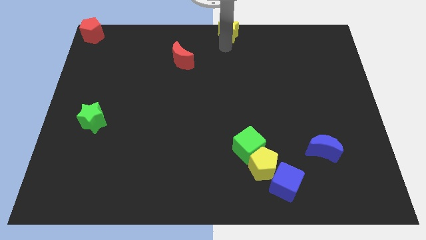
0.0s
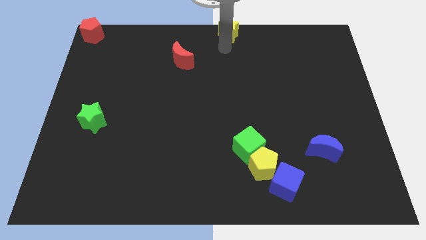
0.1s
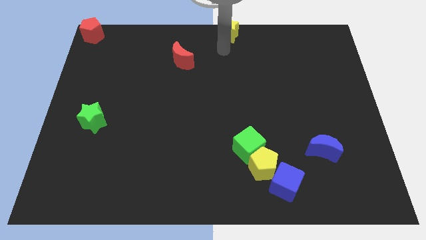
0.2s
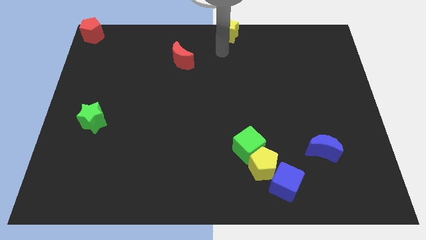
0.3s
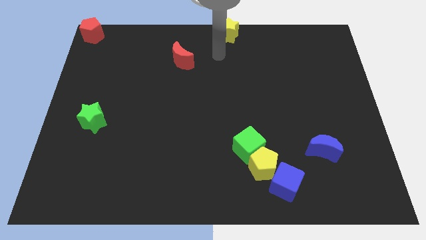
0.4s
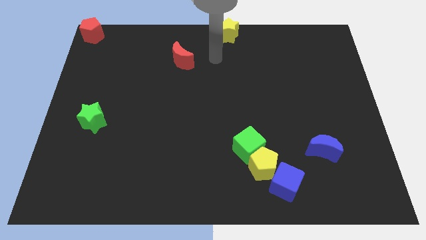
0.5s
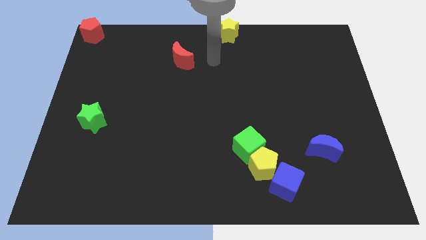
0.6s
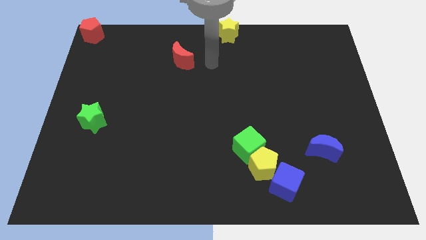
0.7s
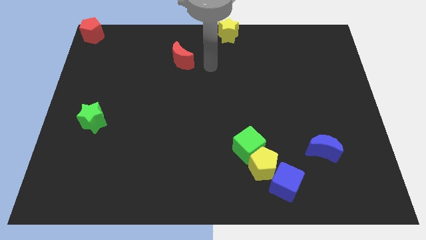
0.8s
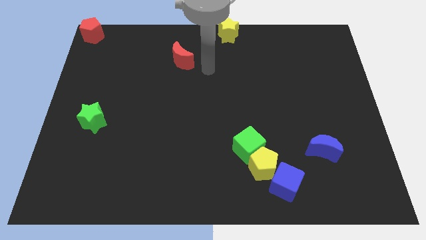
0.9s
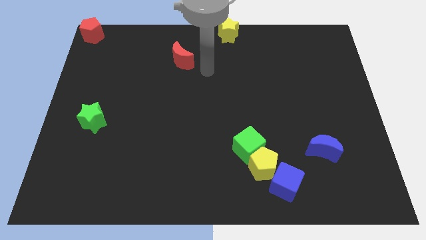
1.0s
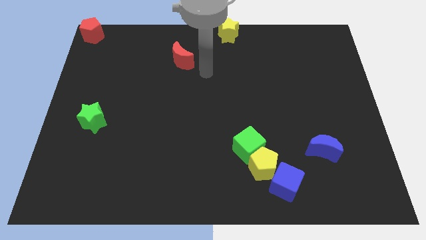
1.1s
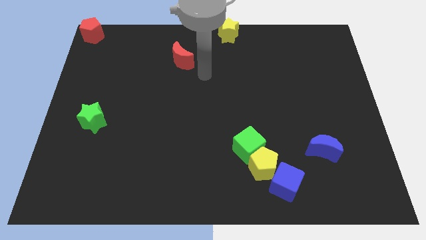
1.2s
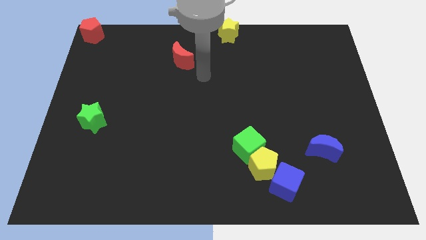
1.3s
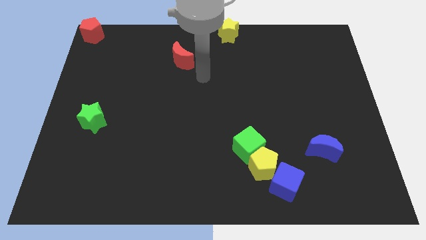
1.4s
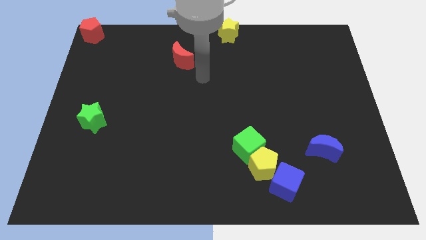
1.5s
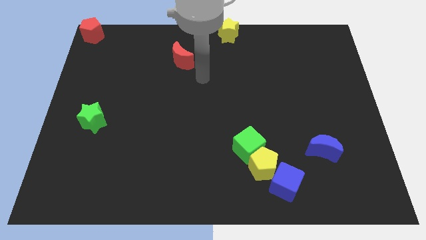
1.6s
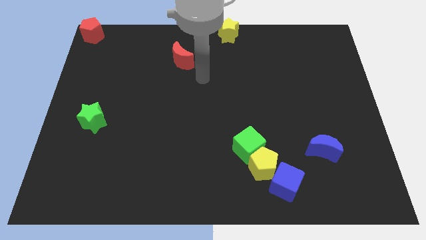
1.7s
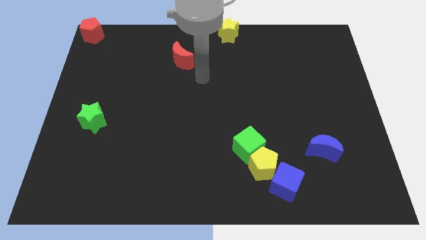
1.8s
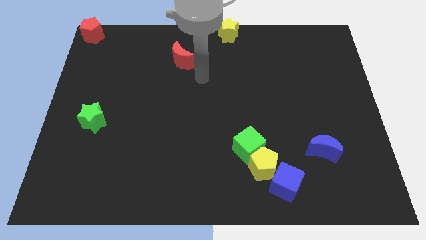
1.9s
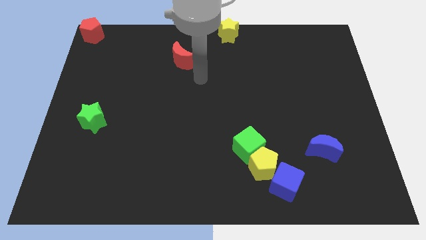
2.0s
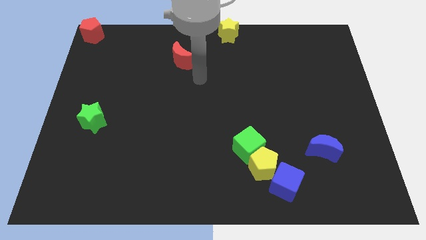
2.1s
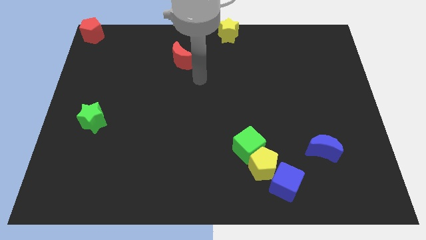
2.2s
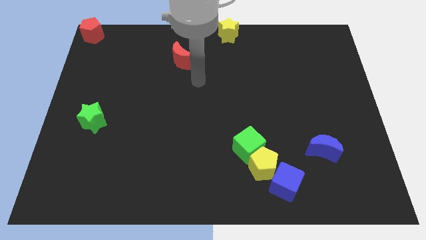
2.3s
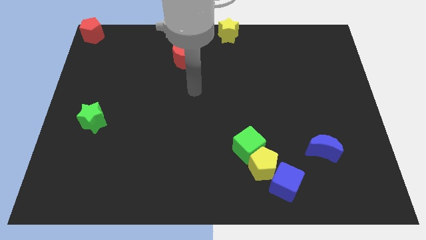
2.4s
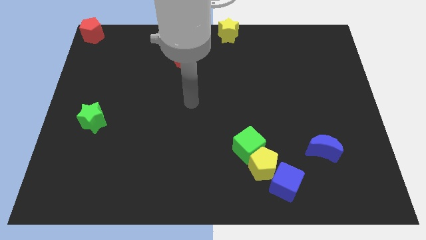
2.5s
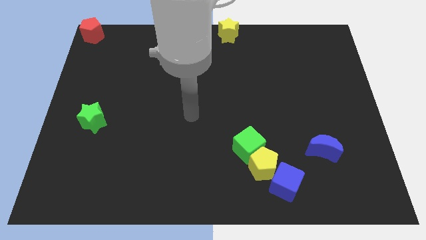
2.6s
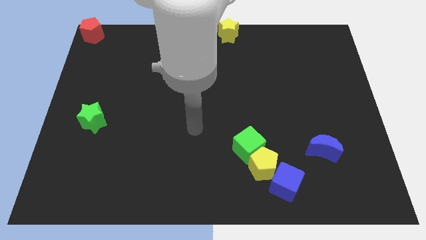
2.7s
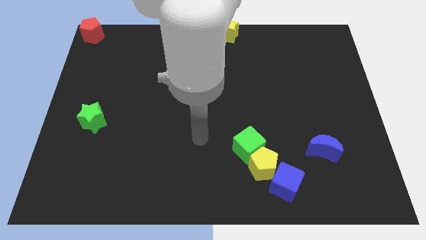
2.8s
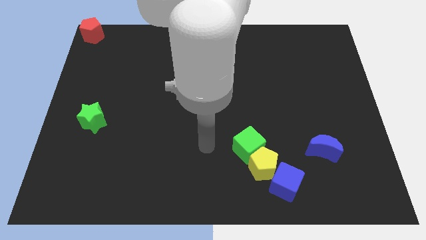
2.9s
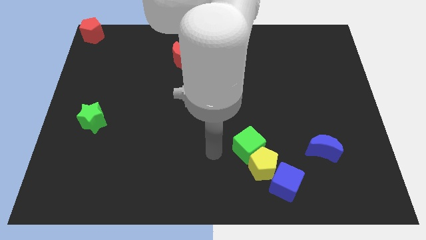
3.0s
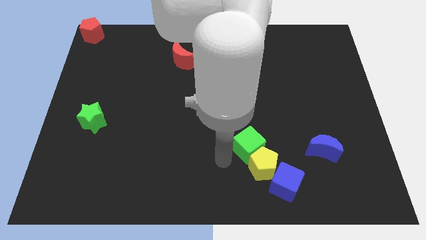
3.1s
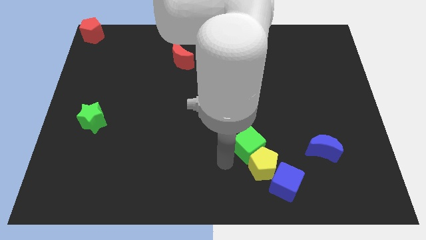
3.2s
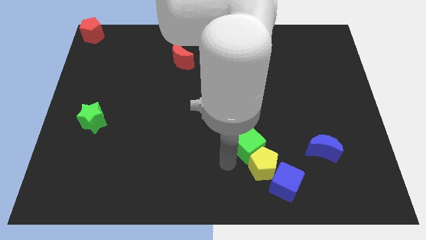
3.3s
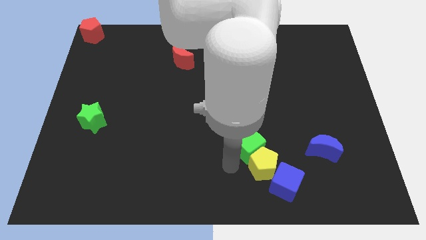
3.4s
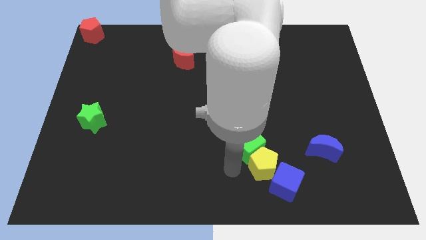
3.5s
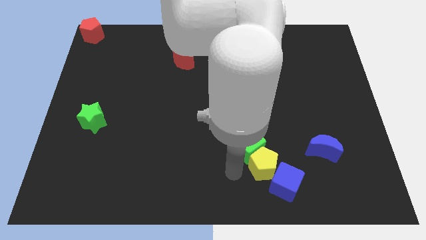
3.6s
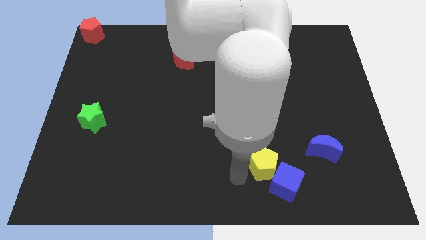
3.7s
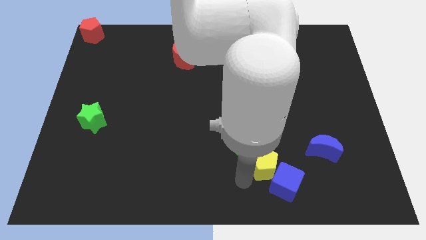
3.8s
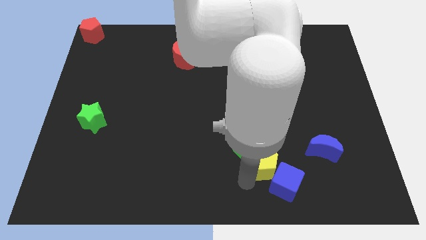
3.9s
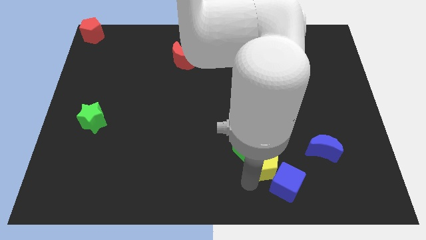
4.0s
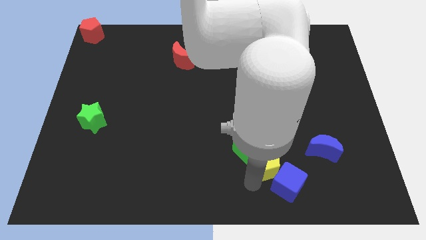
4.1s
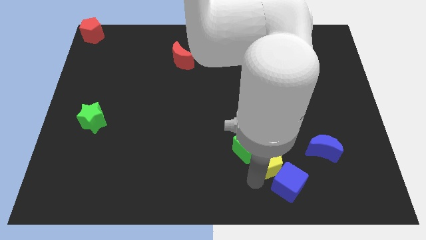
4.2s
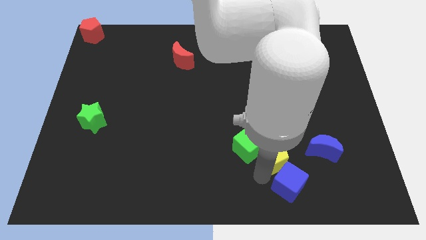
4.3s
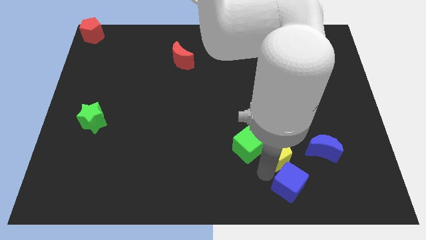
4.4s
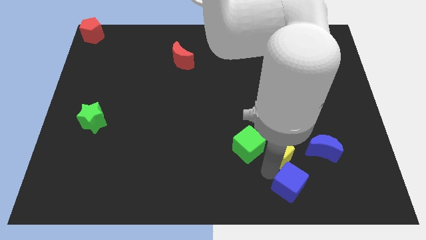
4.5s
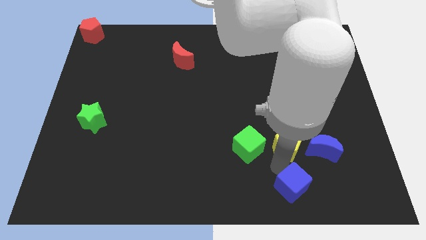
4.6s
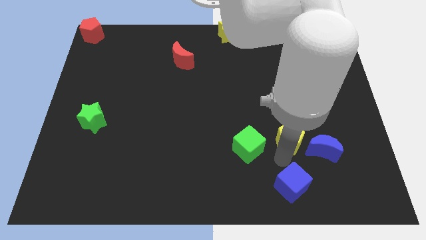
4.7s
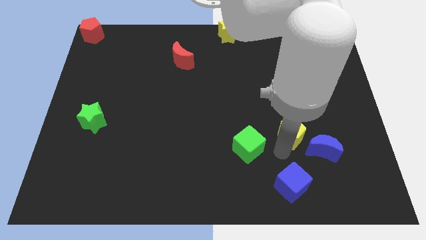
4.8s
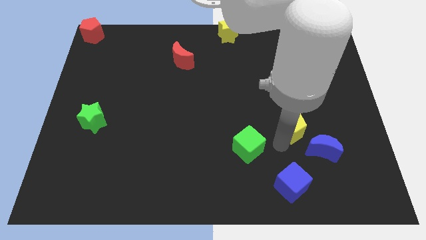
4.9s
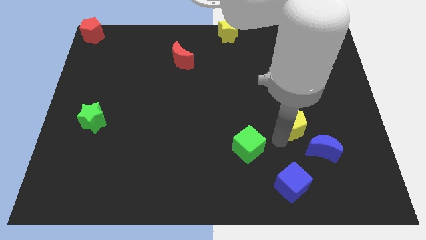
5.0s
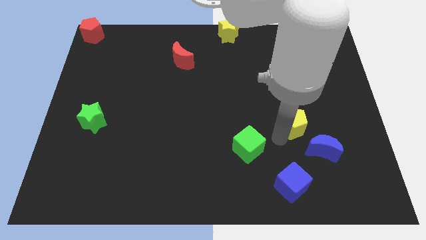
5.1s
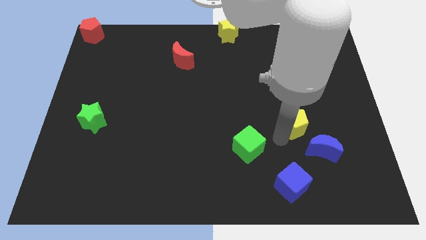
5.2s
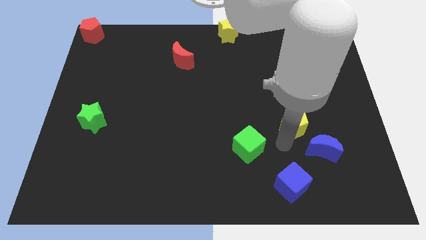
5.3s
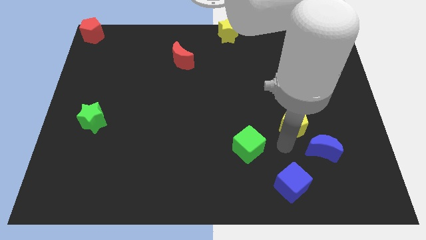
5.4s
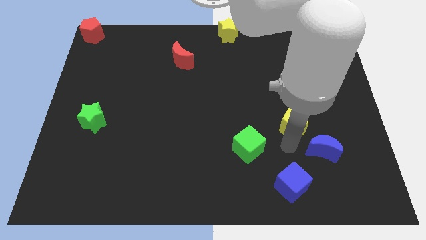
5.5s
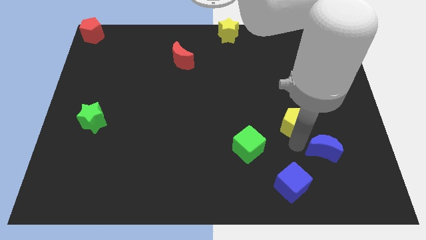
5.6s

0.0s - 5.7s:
separate the yellow pentagon from the green cube and blue cube

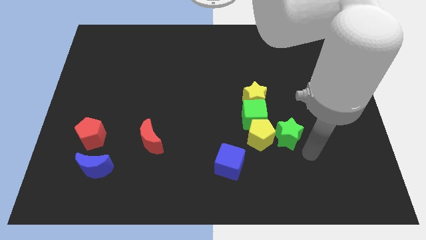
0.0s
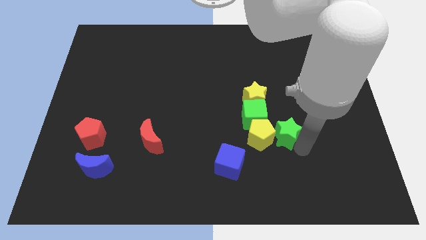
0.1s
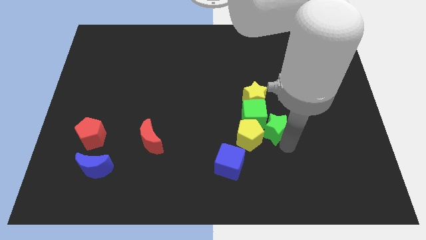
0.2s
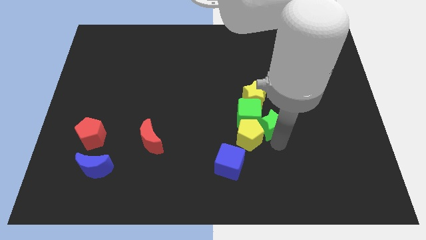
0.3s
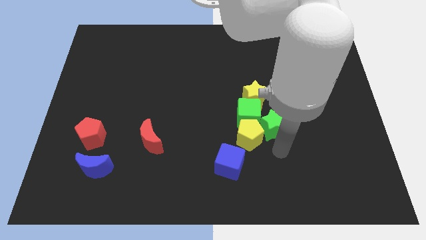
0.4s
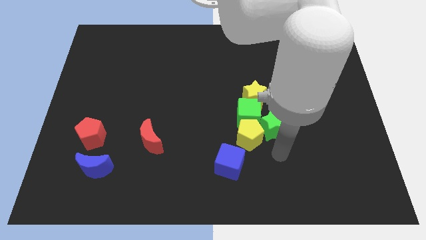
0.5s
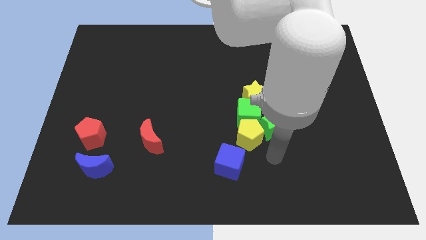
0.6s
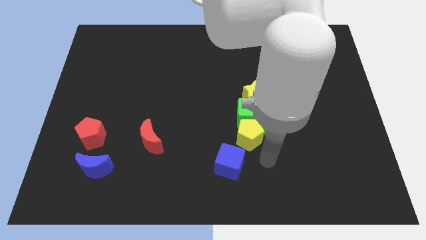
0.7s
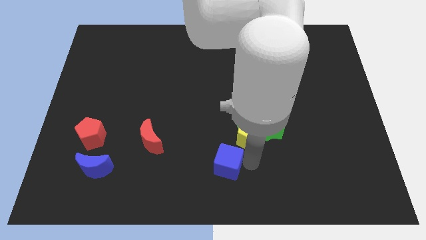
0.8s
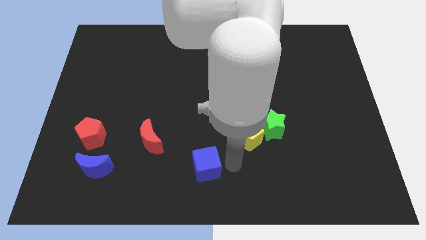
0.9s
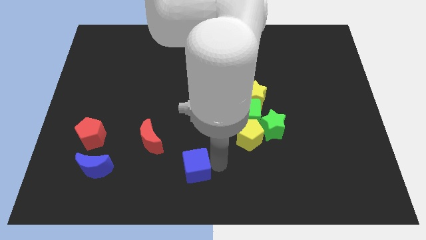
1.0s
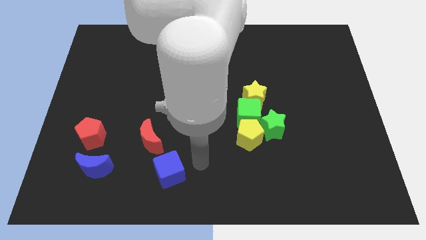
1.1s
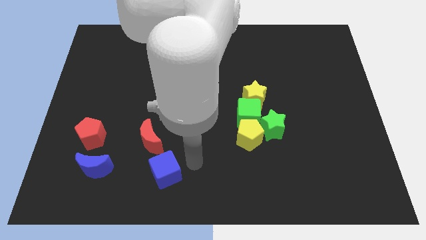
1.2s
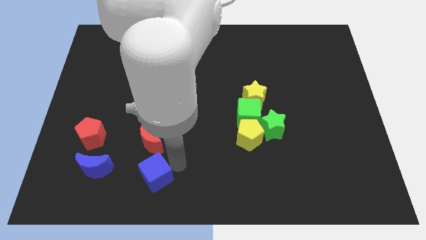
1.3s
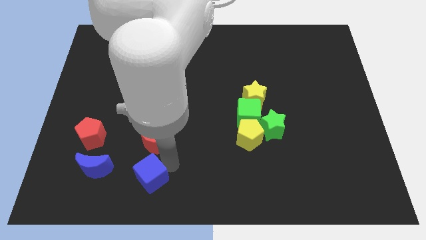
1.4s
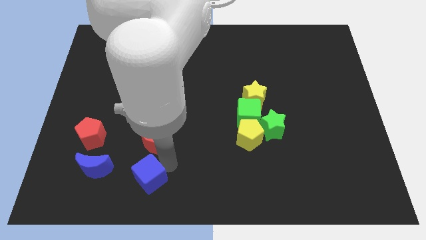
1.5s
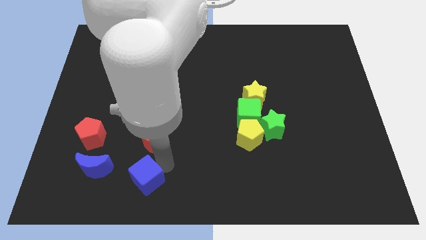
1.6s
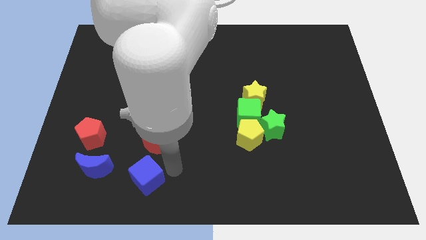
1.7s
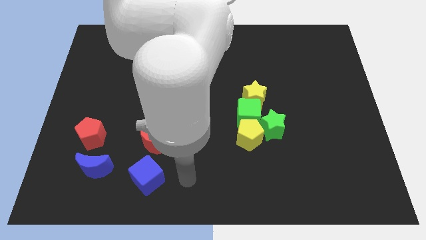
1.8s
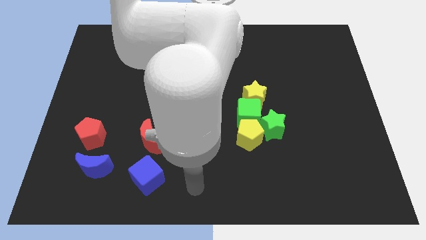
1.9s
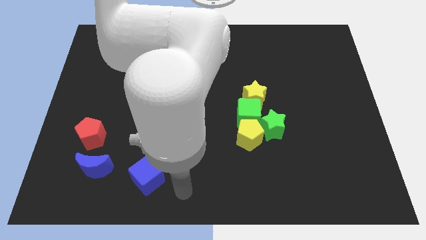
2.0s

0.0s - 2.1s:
place blue cube below red moon

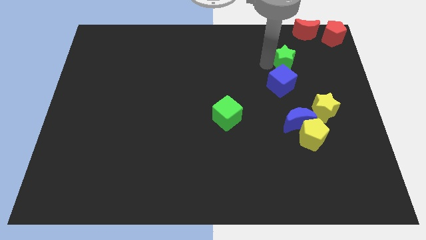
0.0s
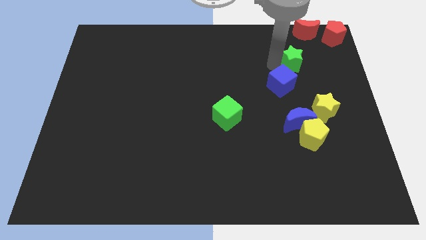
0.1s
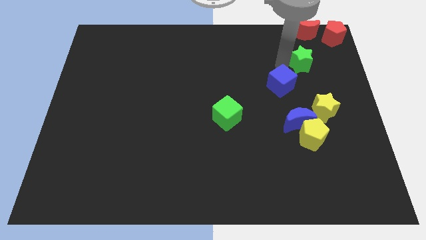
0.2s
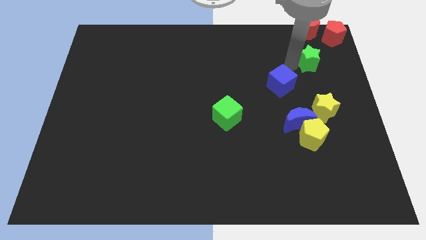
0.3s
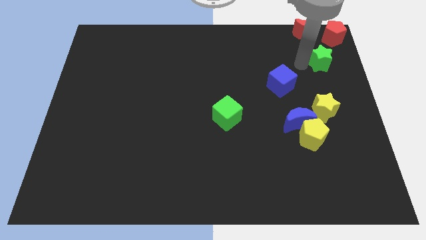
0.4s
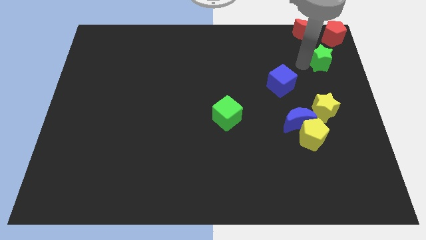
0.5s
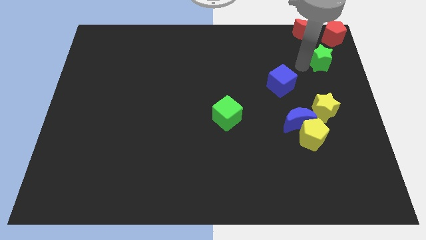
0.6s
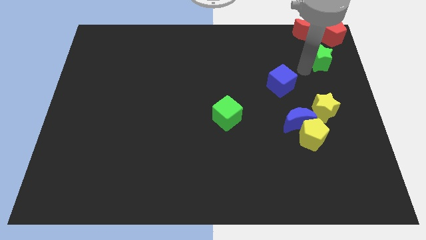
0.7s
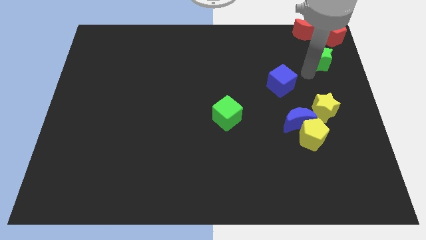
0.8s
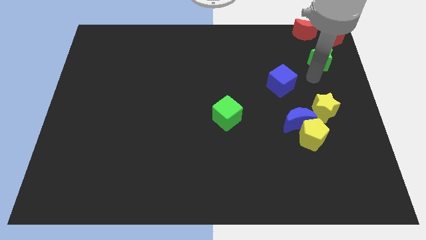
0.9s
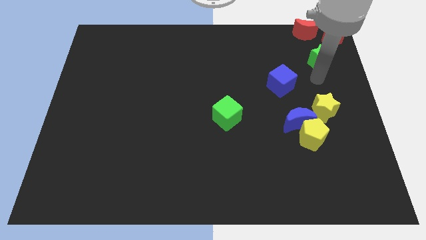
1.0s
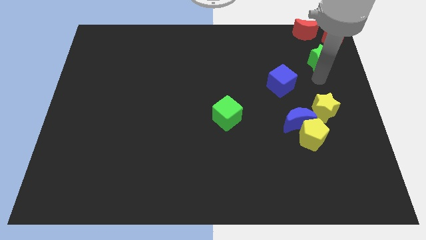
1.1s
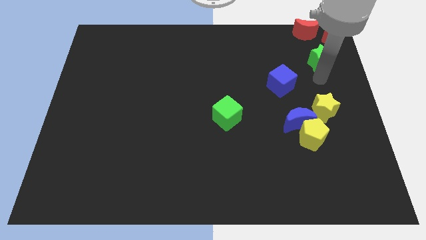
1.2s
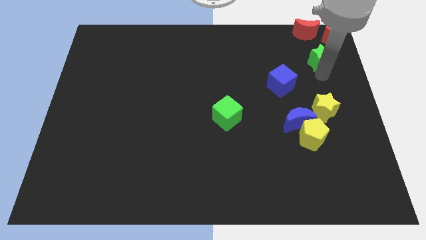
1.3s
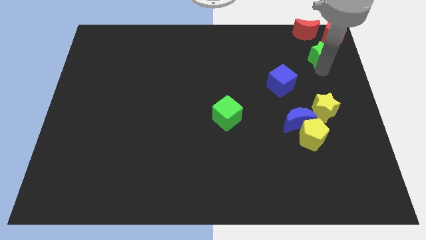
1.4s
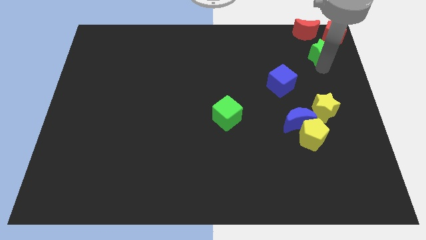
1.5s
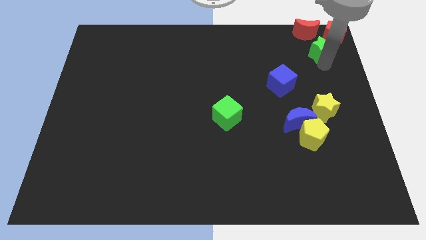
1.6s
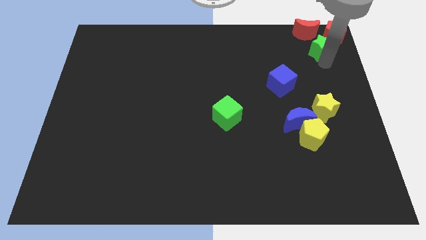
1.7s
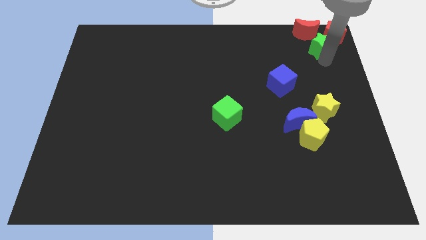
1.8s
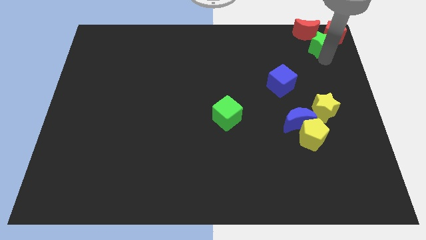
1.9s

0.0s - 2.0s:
push the green star towards the red pentagon
